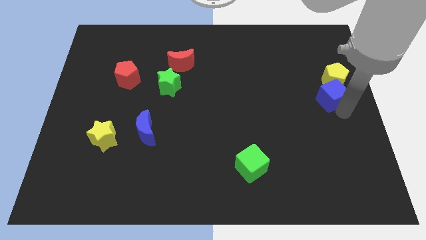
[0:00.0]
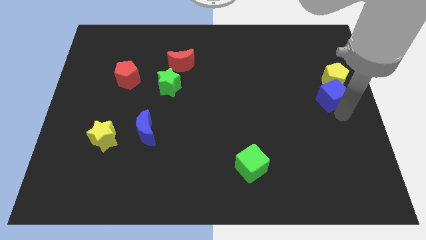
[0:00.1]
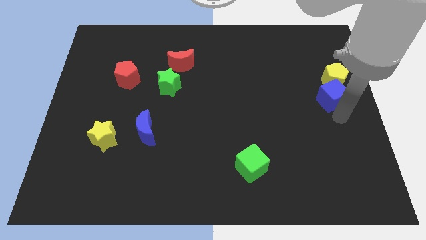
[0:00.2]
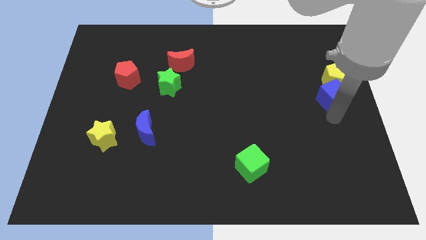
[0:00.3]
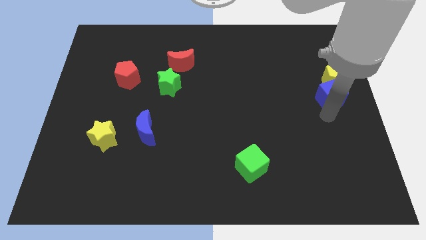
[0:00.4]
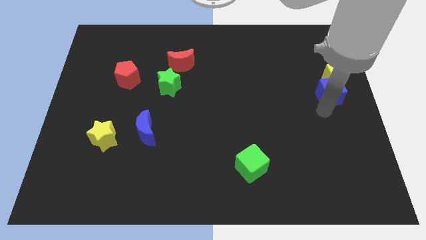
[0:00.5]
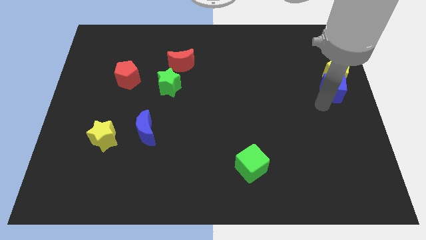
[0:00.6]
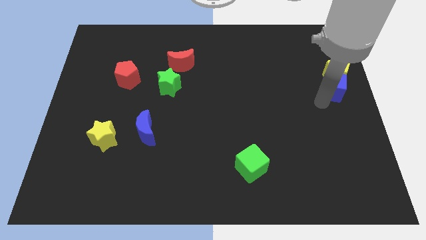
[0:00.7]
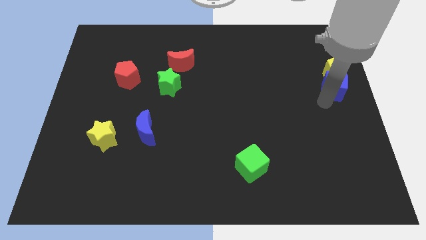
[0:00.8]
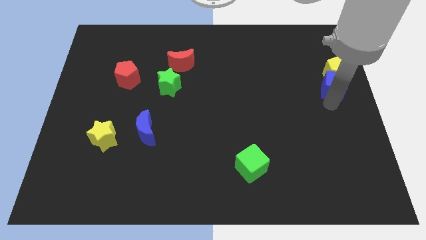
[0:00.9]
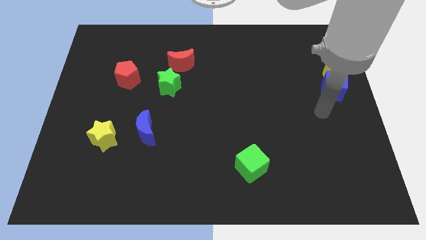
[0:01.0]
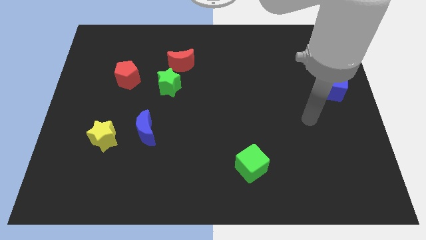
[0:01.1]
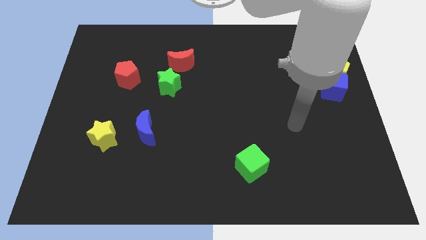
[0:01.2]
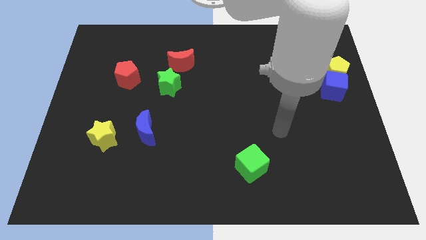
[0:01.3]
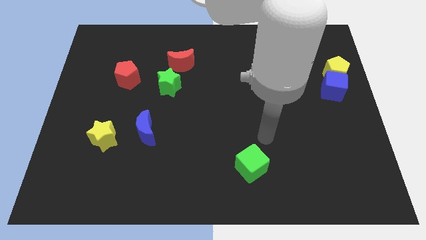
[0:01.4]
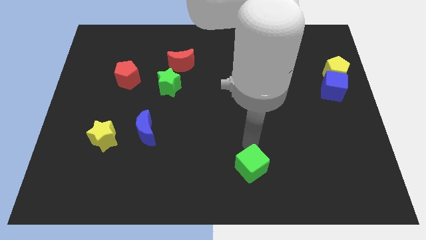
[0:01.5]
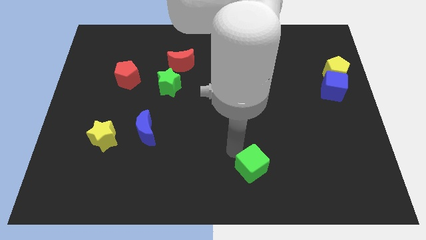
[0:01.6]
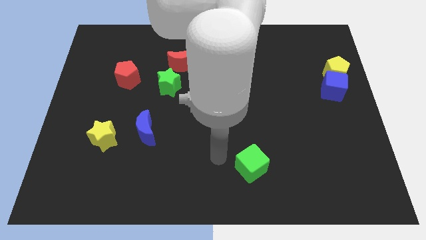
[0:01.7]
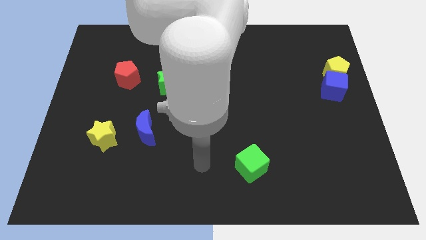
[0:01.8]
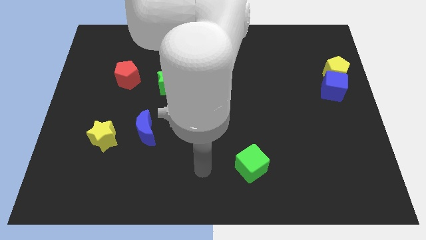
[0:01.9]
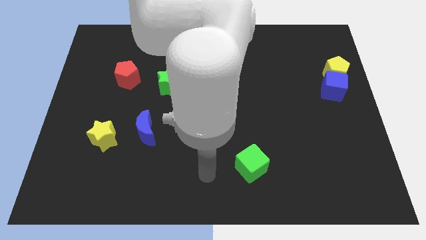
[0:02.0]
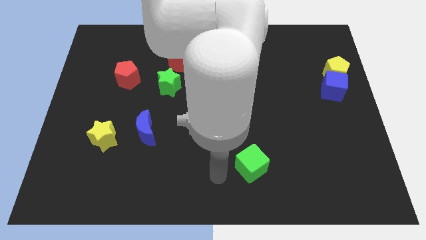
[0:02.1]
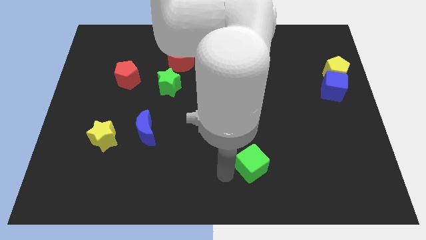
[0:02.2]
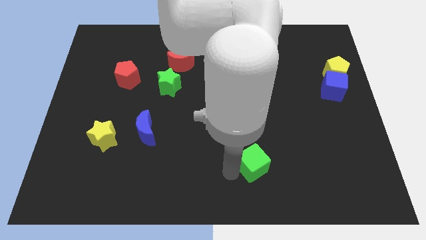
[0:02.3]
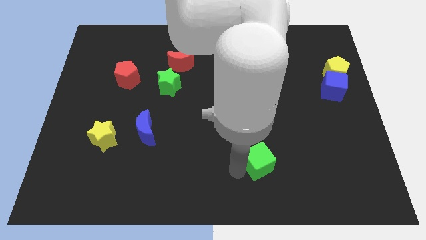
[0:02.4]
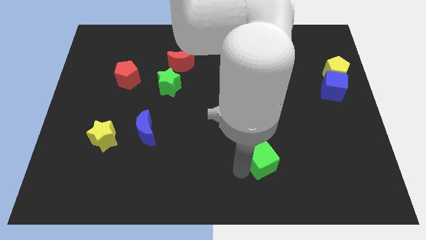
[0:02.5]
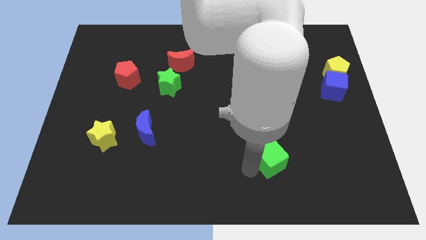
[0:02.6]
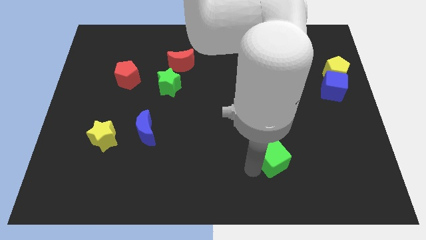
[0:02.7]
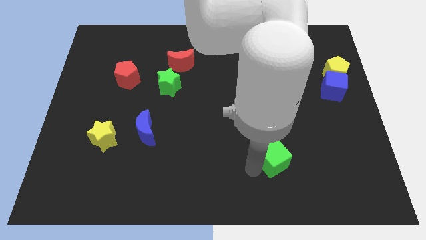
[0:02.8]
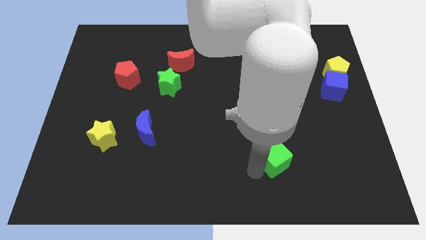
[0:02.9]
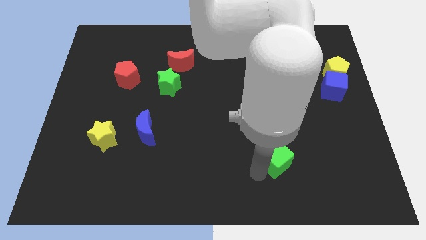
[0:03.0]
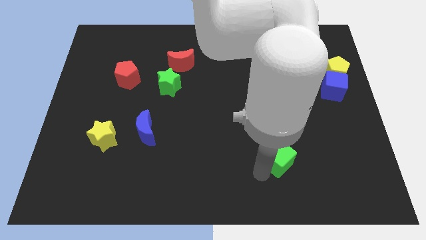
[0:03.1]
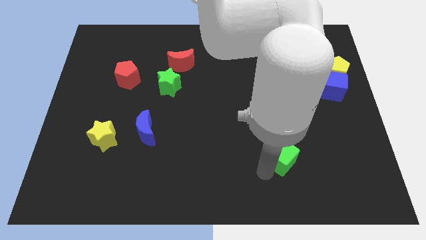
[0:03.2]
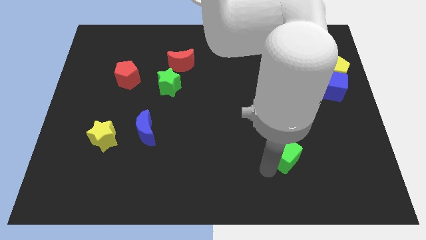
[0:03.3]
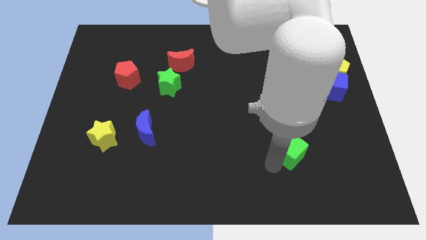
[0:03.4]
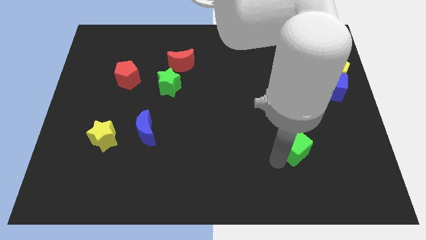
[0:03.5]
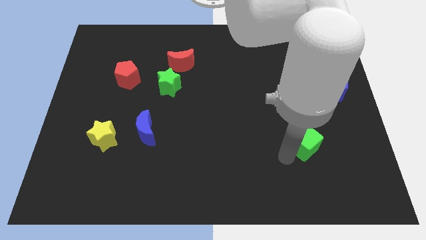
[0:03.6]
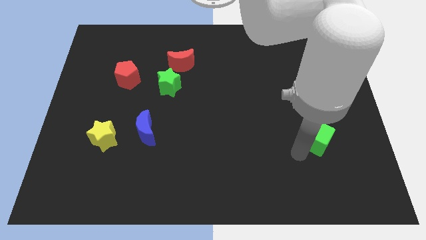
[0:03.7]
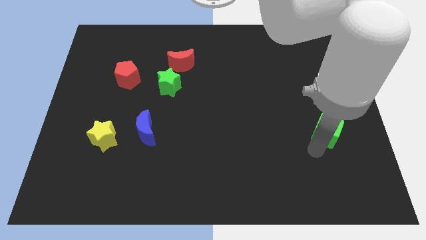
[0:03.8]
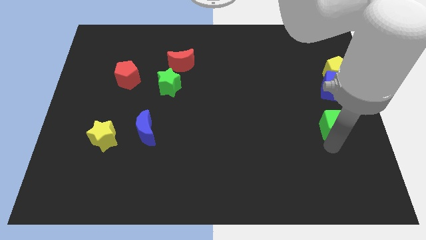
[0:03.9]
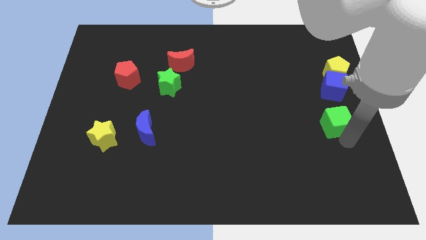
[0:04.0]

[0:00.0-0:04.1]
place green cube below blue cube

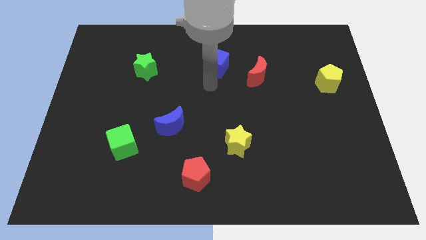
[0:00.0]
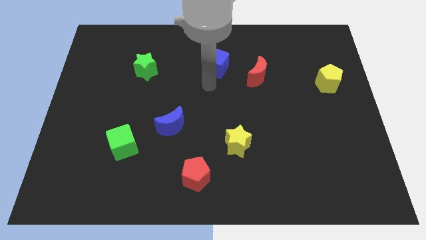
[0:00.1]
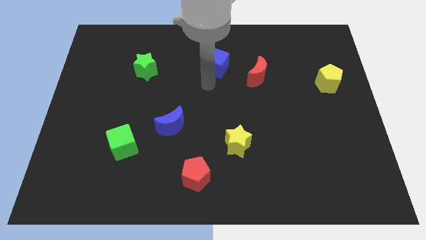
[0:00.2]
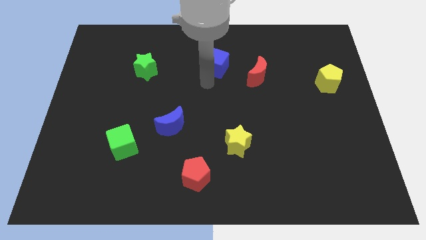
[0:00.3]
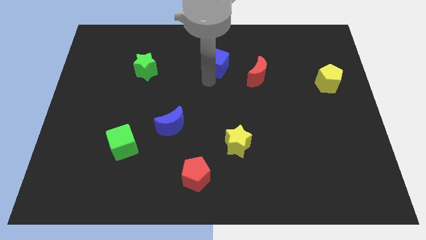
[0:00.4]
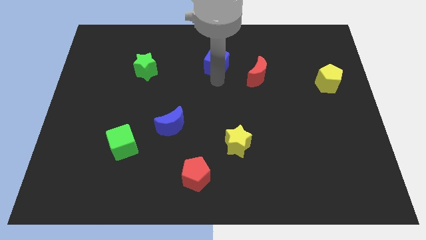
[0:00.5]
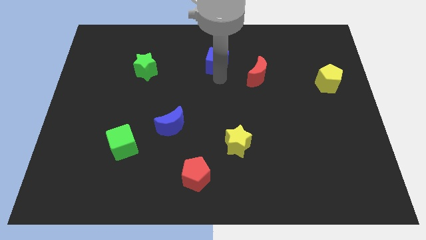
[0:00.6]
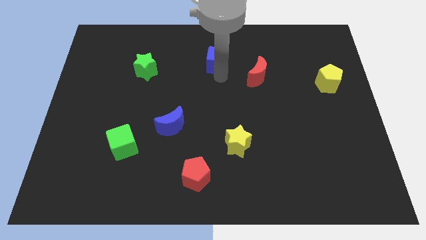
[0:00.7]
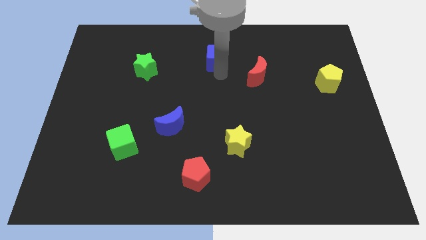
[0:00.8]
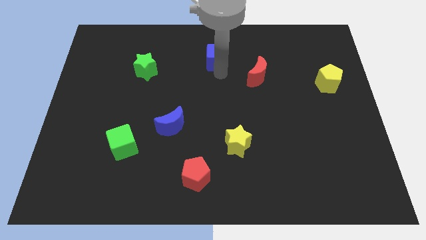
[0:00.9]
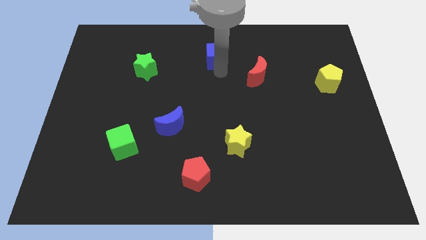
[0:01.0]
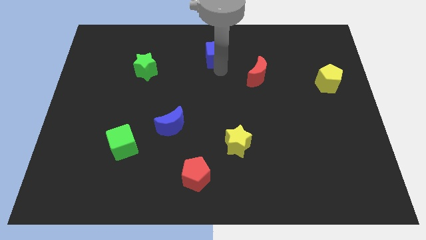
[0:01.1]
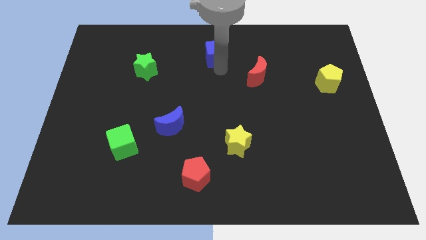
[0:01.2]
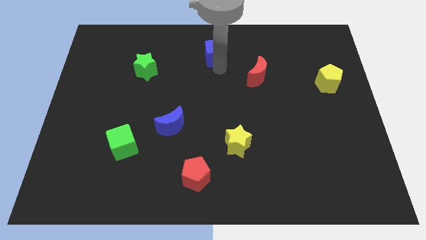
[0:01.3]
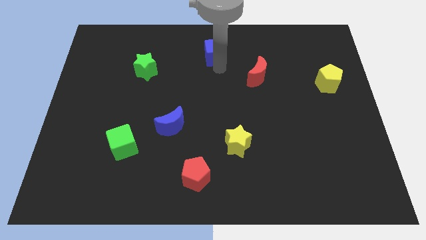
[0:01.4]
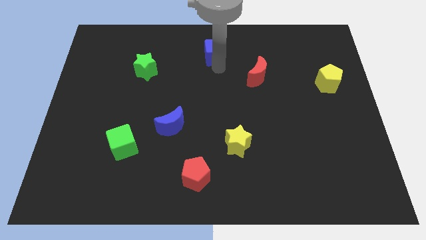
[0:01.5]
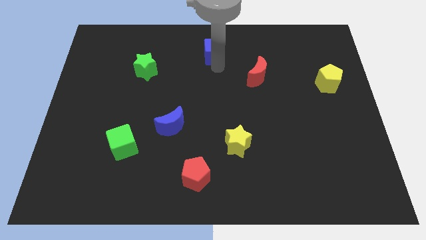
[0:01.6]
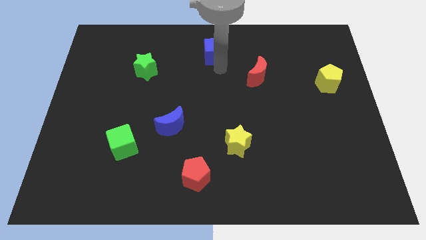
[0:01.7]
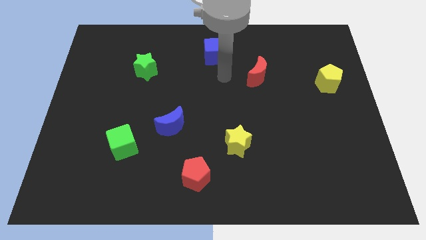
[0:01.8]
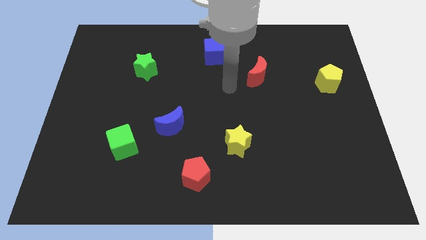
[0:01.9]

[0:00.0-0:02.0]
move the blue cube slightly up

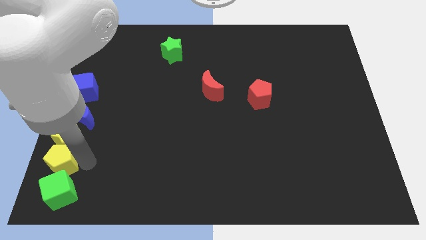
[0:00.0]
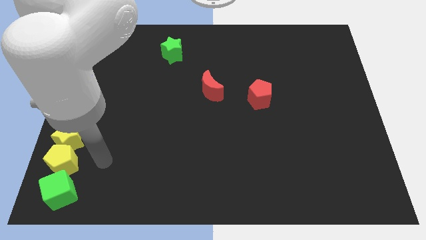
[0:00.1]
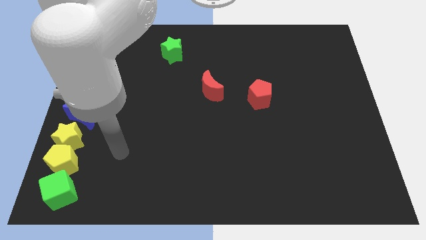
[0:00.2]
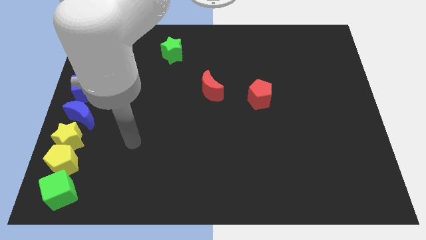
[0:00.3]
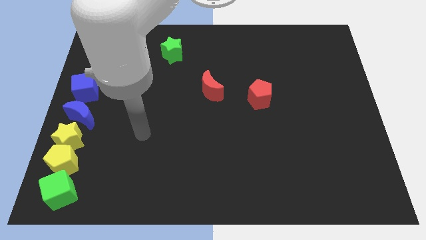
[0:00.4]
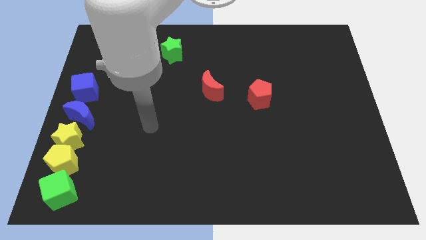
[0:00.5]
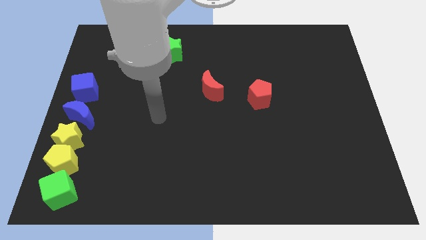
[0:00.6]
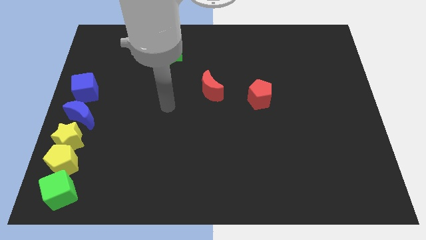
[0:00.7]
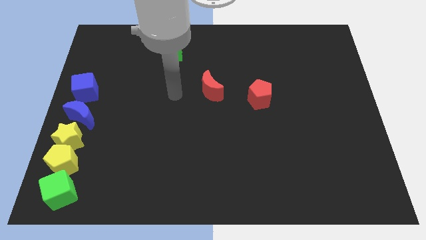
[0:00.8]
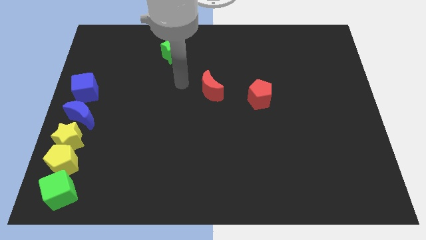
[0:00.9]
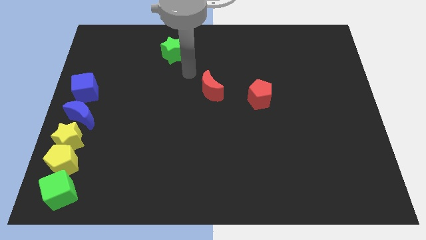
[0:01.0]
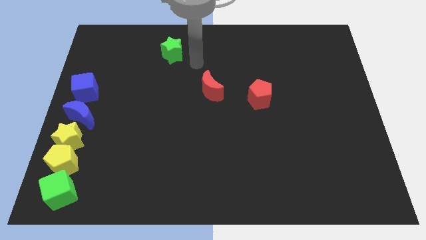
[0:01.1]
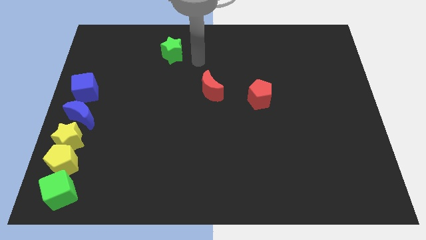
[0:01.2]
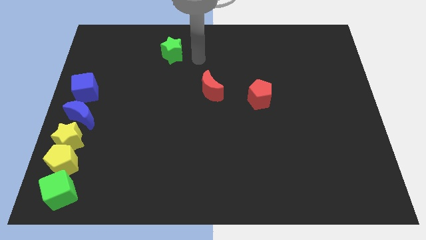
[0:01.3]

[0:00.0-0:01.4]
point your arm at the right of the green star

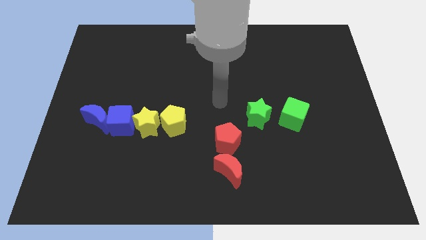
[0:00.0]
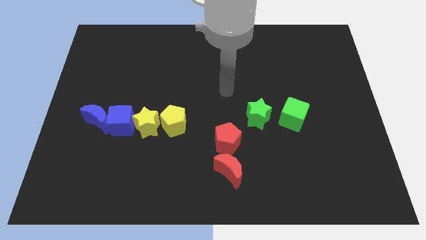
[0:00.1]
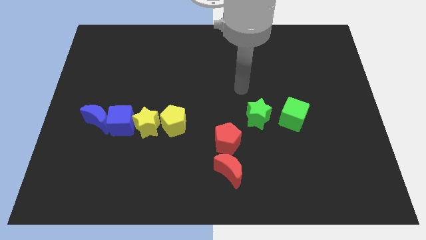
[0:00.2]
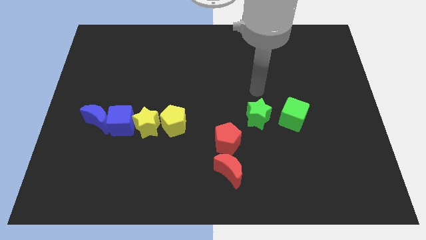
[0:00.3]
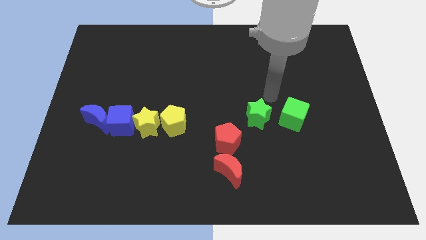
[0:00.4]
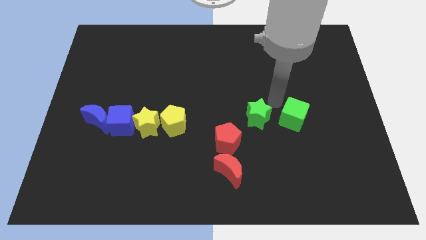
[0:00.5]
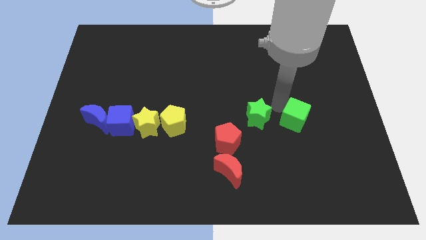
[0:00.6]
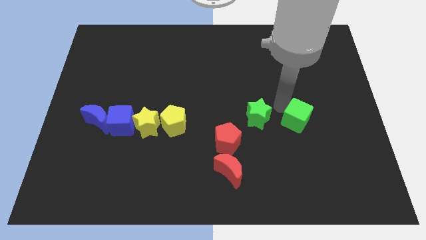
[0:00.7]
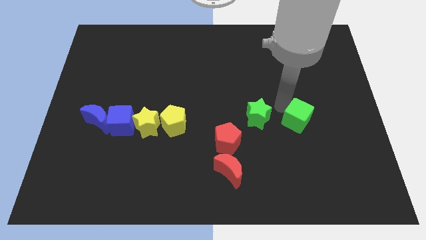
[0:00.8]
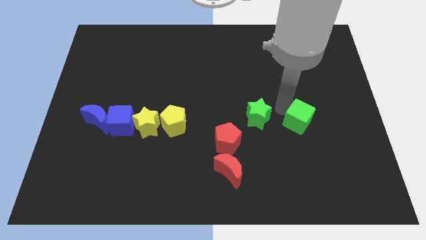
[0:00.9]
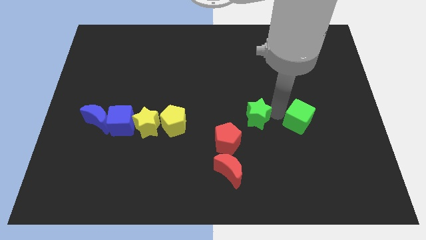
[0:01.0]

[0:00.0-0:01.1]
move your hand towards the green cube

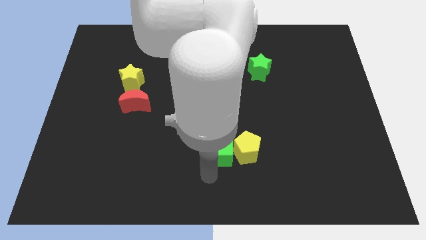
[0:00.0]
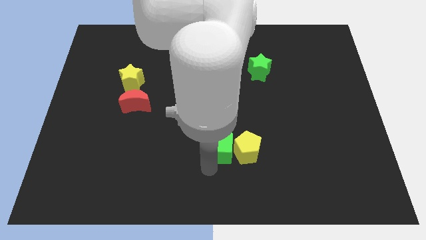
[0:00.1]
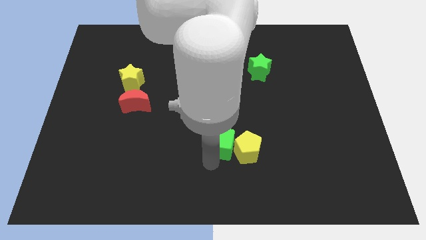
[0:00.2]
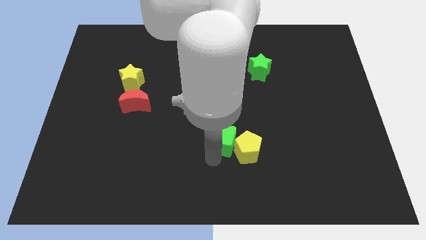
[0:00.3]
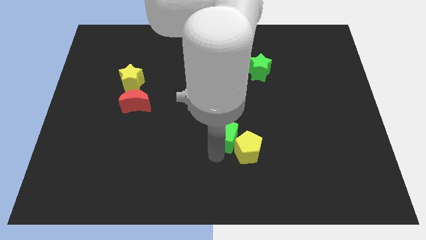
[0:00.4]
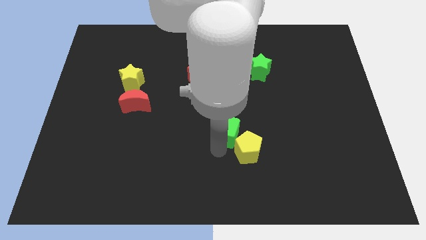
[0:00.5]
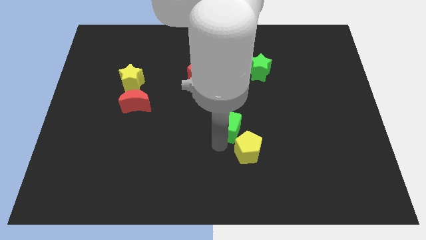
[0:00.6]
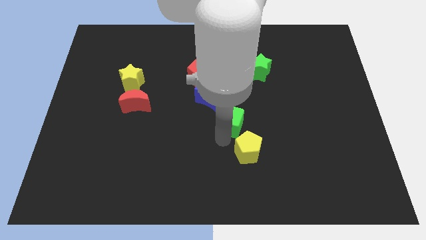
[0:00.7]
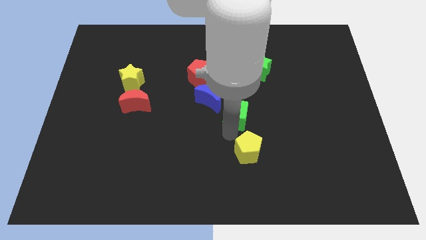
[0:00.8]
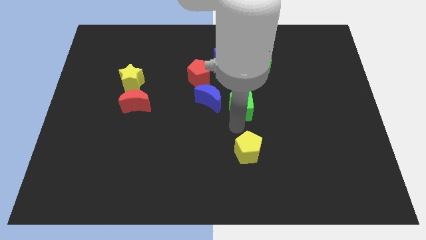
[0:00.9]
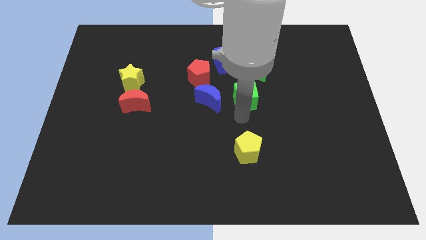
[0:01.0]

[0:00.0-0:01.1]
move the green cube to the bottom of the green star
